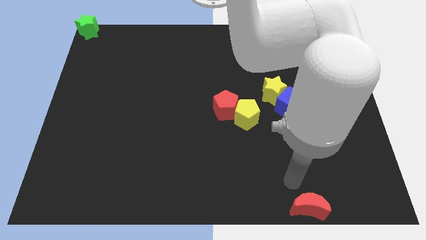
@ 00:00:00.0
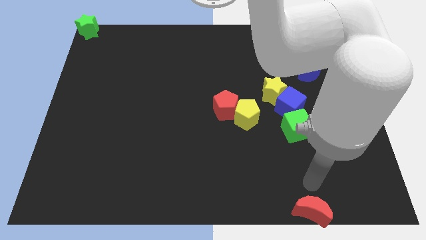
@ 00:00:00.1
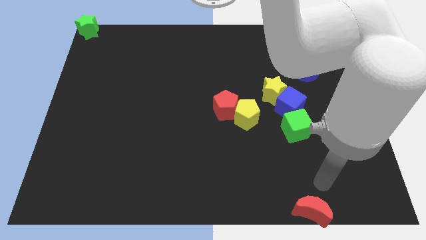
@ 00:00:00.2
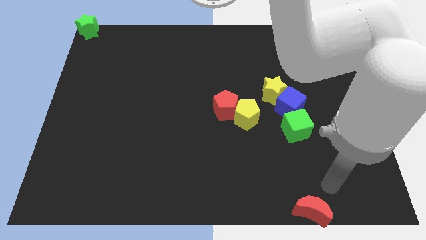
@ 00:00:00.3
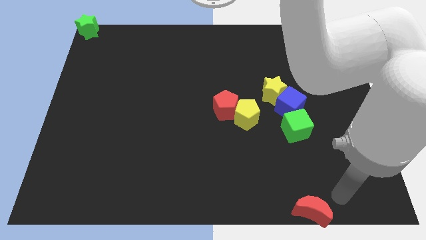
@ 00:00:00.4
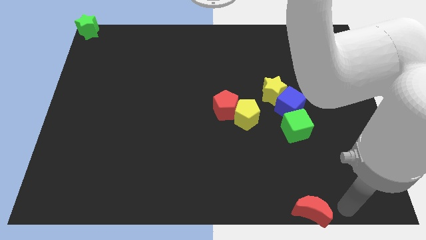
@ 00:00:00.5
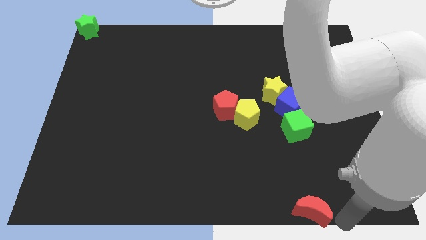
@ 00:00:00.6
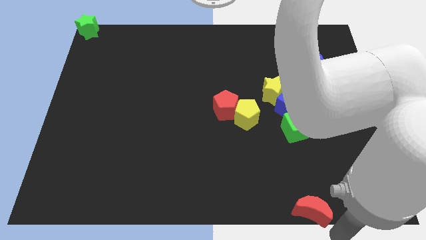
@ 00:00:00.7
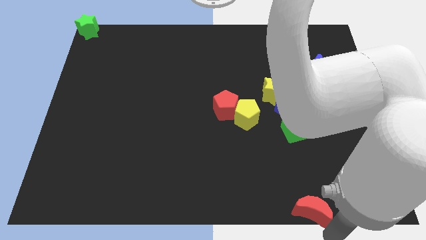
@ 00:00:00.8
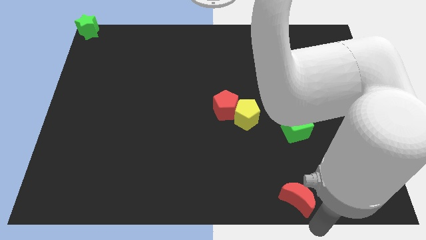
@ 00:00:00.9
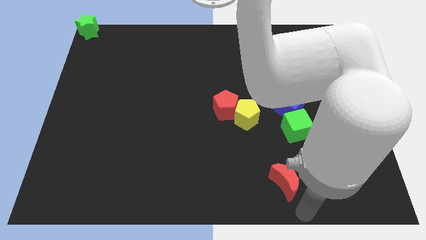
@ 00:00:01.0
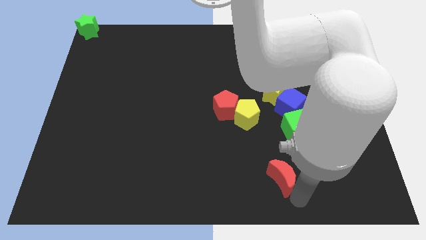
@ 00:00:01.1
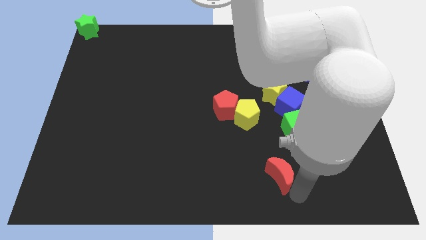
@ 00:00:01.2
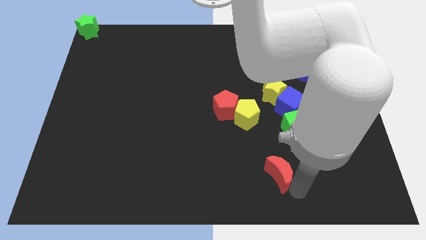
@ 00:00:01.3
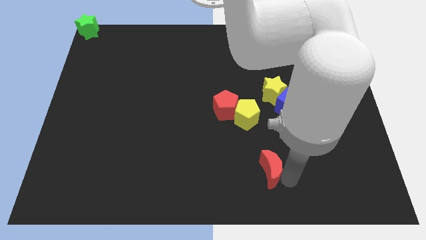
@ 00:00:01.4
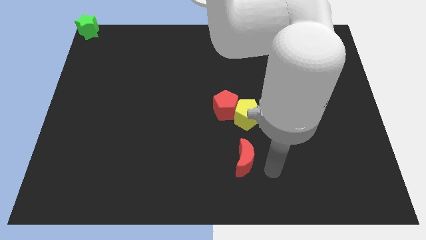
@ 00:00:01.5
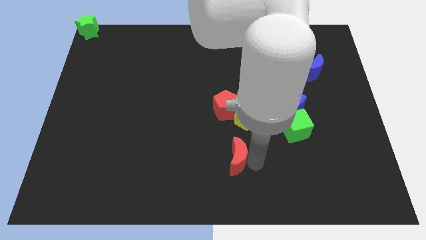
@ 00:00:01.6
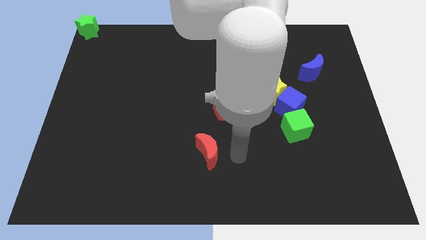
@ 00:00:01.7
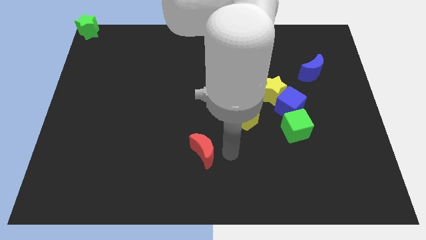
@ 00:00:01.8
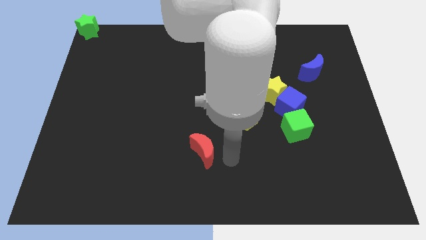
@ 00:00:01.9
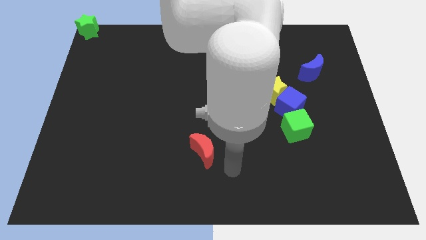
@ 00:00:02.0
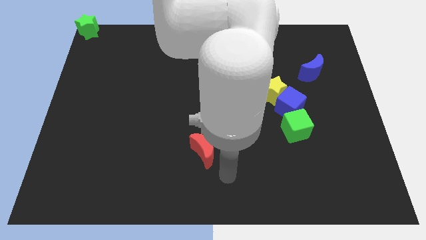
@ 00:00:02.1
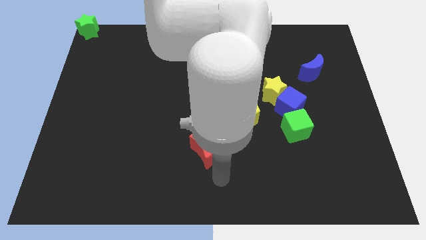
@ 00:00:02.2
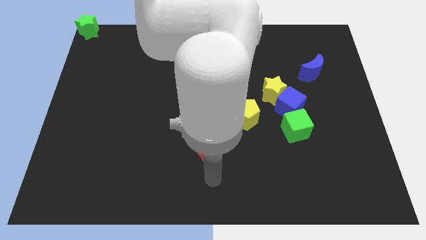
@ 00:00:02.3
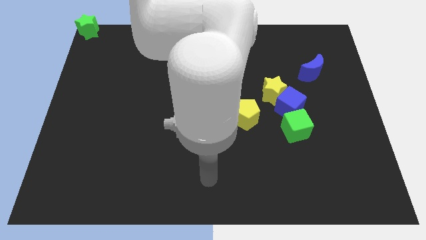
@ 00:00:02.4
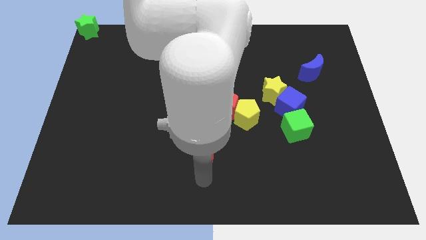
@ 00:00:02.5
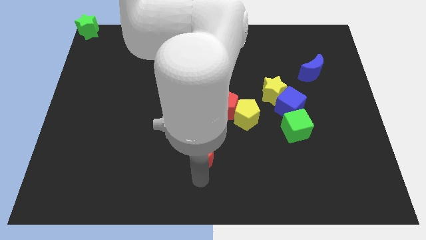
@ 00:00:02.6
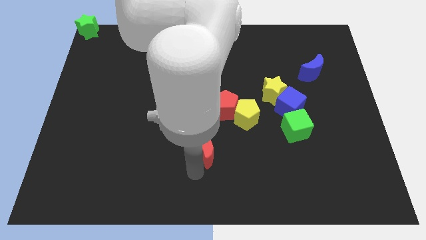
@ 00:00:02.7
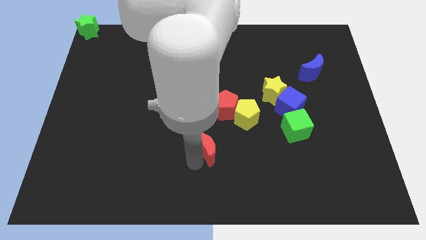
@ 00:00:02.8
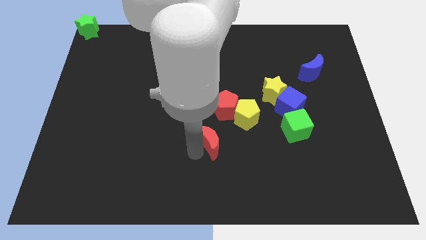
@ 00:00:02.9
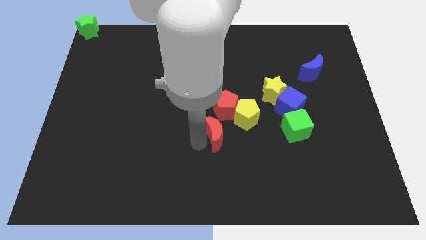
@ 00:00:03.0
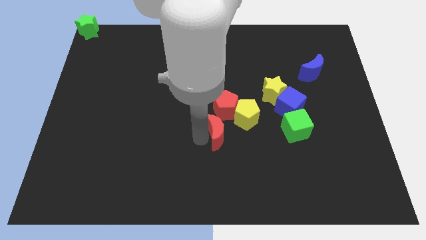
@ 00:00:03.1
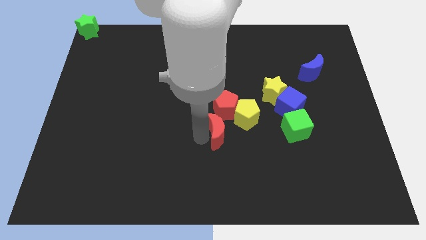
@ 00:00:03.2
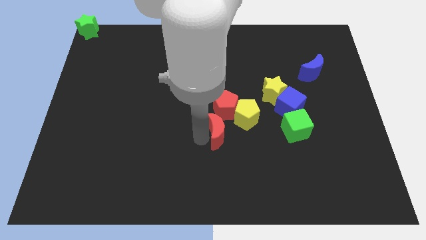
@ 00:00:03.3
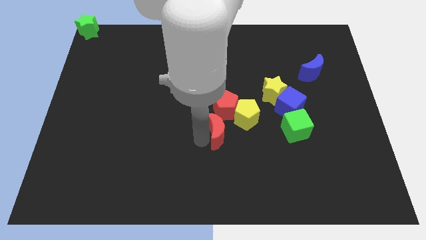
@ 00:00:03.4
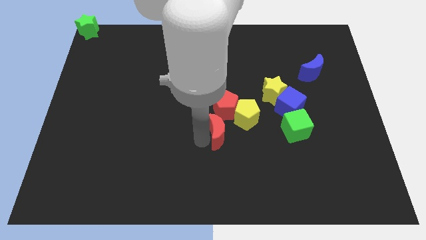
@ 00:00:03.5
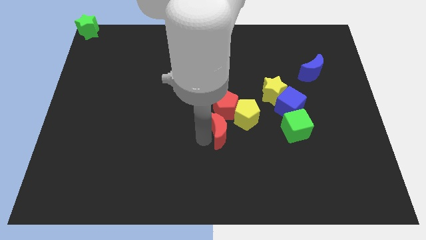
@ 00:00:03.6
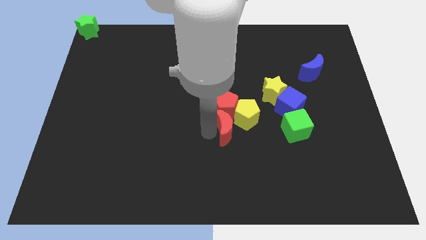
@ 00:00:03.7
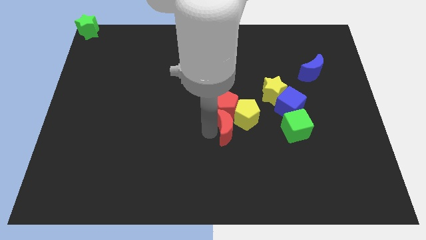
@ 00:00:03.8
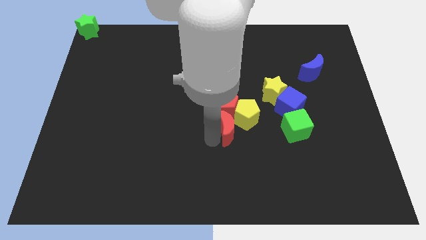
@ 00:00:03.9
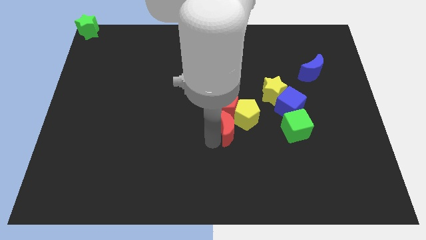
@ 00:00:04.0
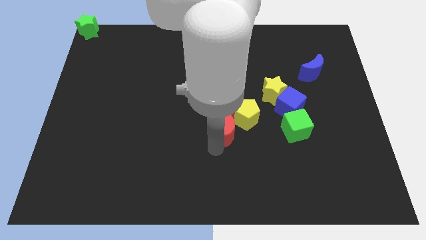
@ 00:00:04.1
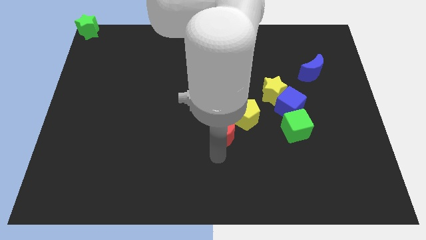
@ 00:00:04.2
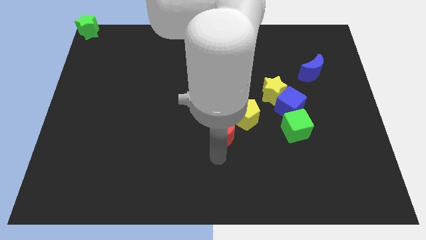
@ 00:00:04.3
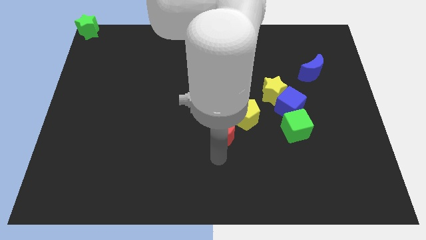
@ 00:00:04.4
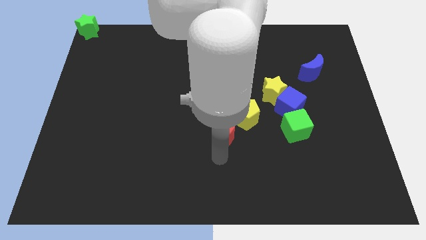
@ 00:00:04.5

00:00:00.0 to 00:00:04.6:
move the red crescent to the bottom of the red pentagon

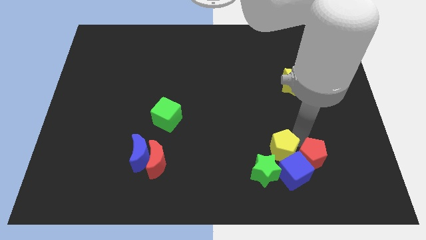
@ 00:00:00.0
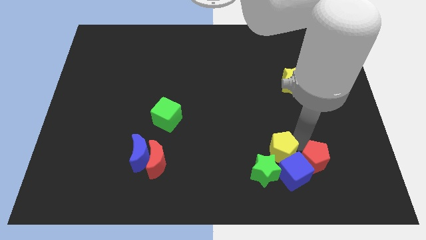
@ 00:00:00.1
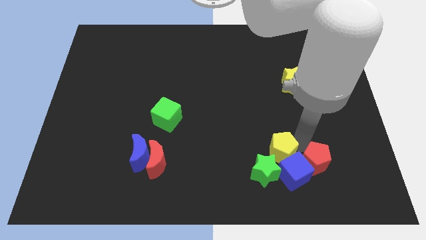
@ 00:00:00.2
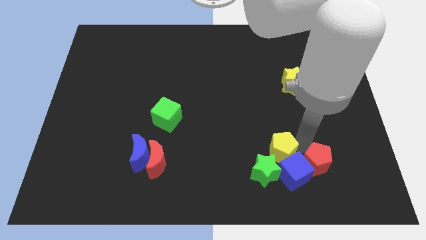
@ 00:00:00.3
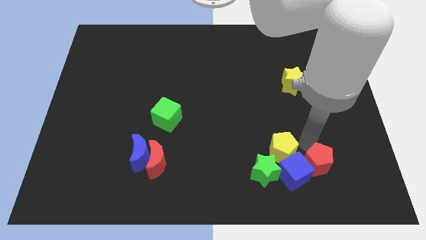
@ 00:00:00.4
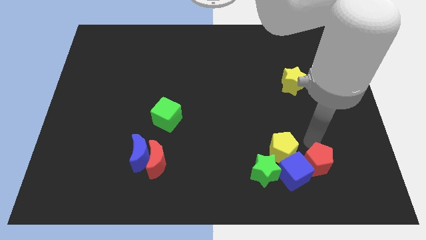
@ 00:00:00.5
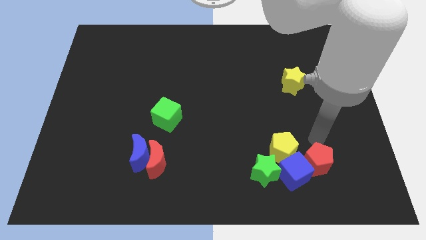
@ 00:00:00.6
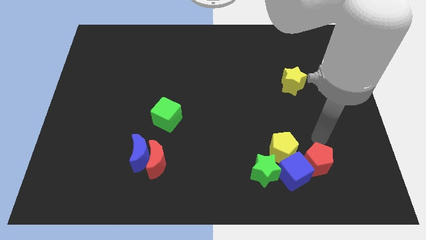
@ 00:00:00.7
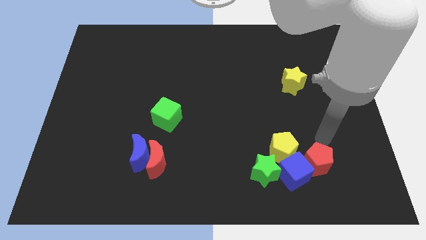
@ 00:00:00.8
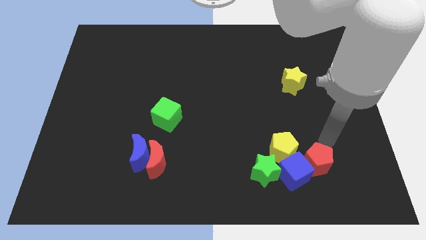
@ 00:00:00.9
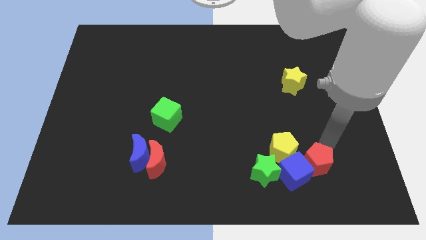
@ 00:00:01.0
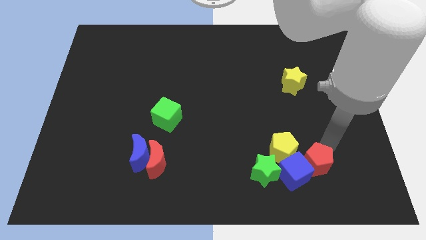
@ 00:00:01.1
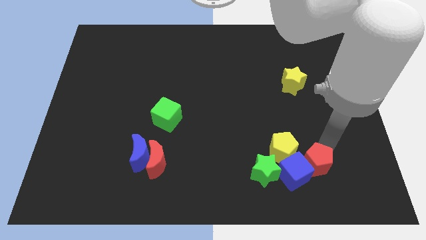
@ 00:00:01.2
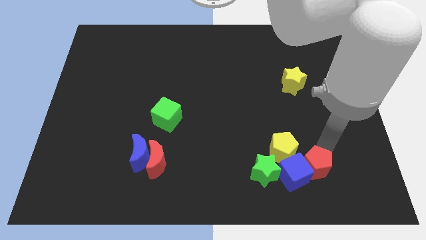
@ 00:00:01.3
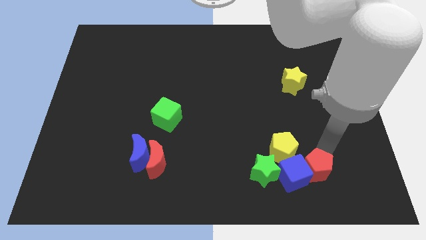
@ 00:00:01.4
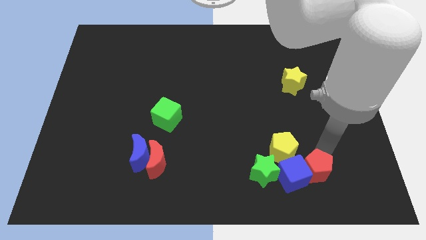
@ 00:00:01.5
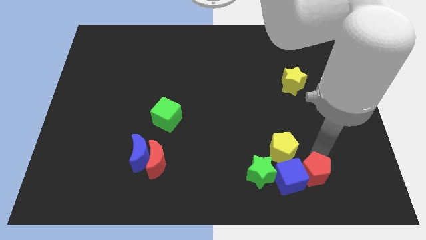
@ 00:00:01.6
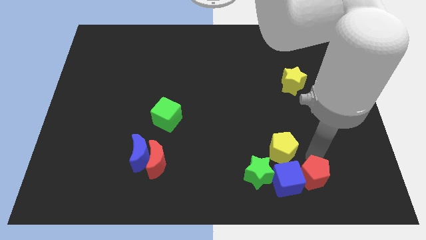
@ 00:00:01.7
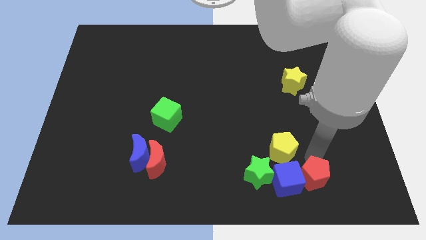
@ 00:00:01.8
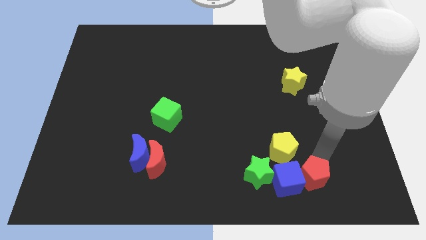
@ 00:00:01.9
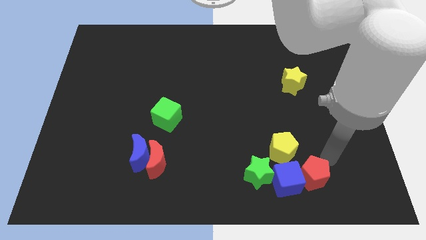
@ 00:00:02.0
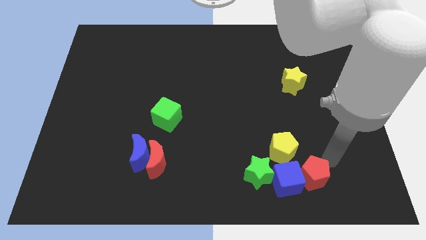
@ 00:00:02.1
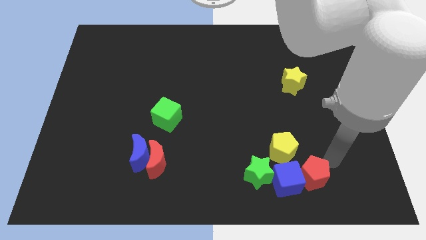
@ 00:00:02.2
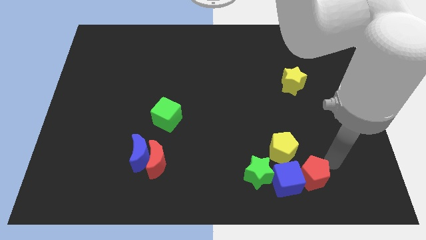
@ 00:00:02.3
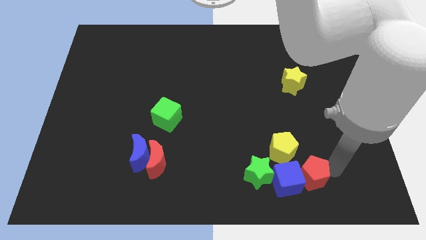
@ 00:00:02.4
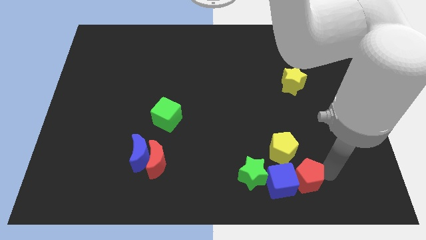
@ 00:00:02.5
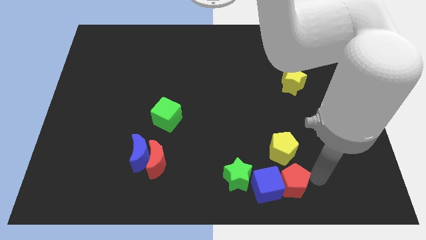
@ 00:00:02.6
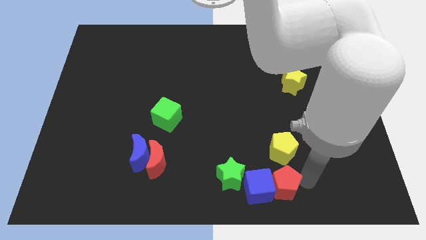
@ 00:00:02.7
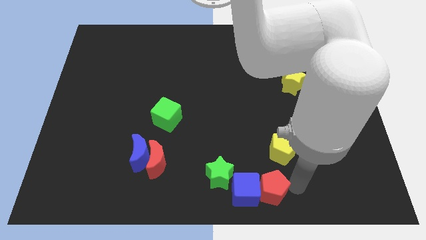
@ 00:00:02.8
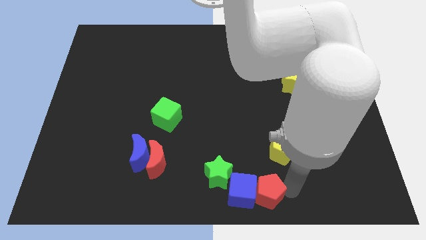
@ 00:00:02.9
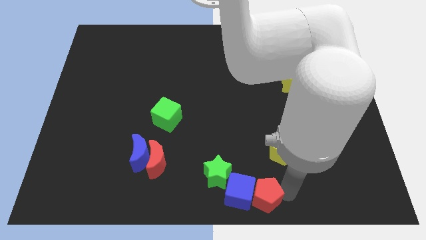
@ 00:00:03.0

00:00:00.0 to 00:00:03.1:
separate the yellow pentagon from a group of blocks

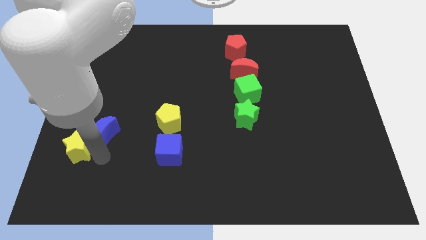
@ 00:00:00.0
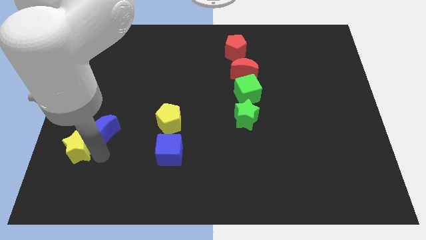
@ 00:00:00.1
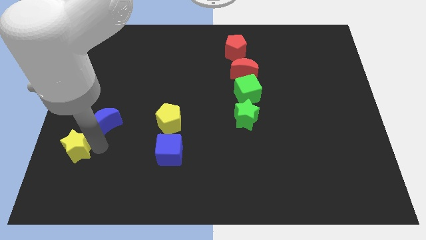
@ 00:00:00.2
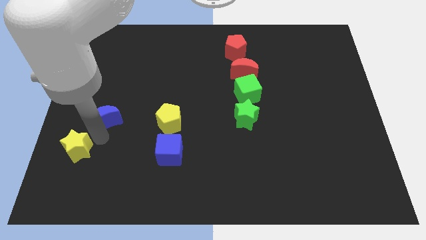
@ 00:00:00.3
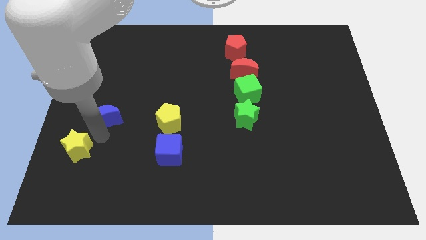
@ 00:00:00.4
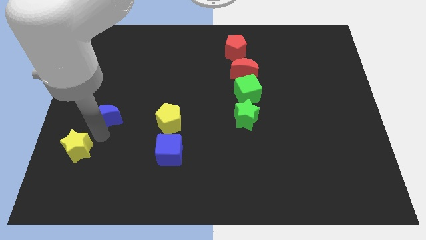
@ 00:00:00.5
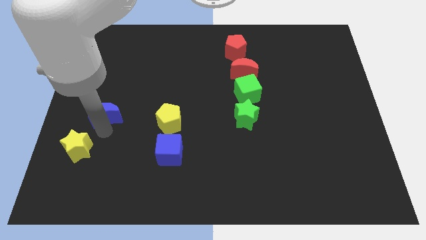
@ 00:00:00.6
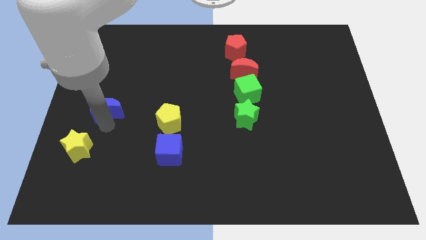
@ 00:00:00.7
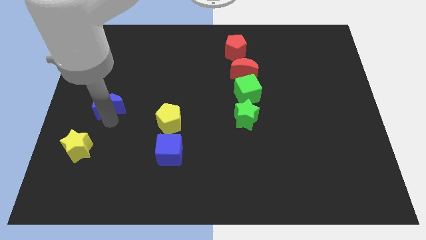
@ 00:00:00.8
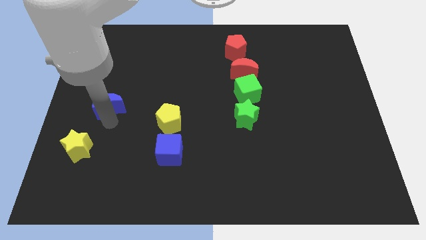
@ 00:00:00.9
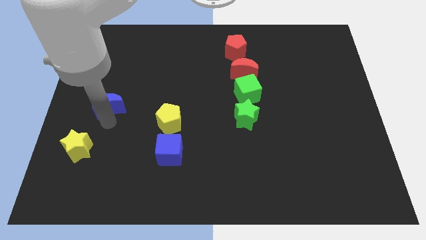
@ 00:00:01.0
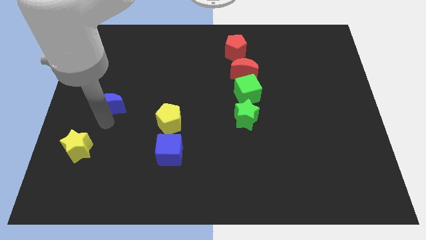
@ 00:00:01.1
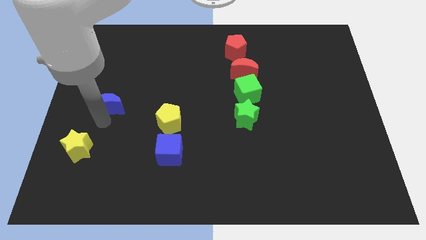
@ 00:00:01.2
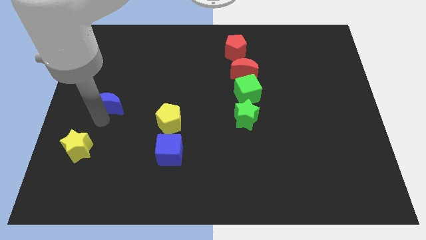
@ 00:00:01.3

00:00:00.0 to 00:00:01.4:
place the blue moon to the left of the yellow pentagon
